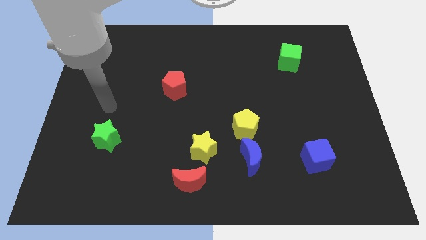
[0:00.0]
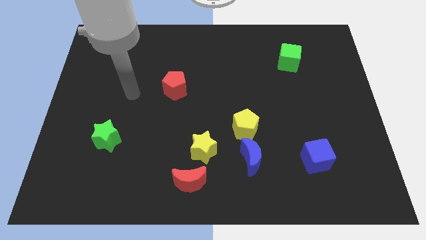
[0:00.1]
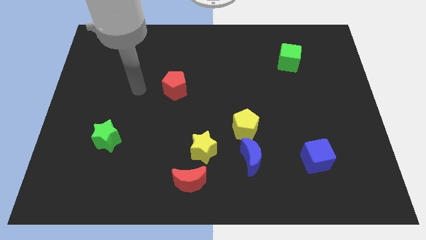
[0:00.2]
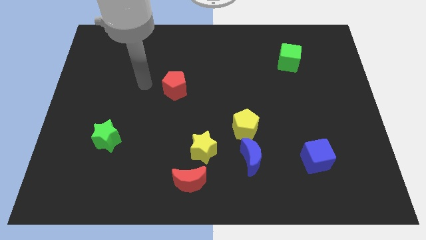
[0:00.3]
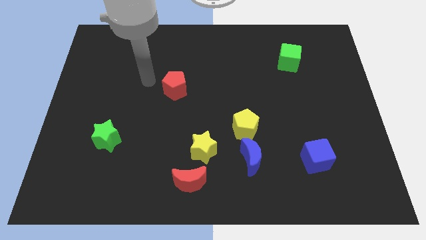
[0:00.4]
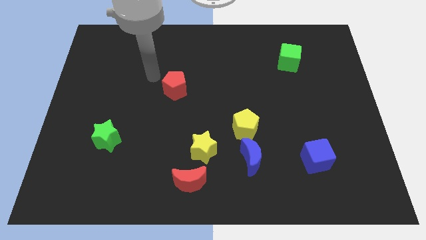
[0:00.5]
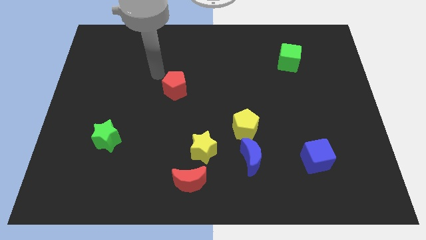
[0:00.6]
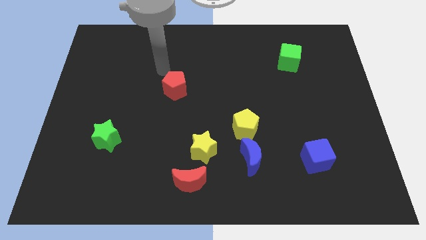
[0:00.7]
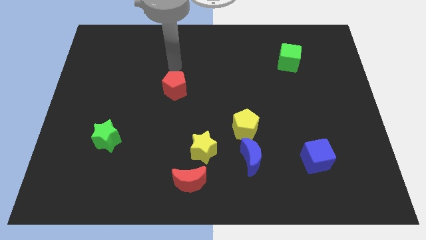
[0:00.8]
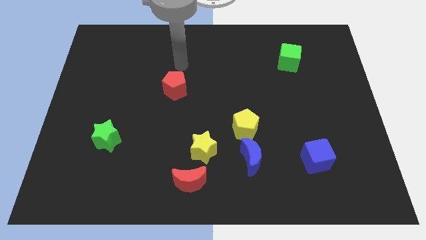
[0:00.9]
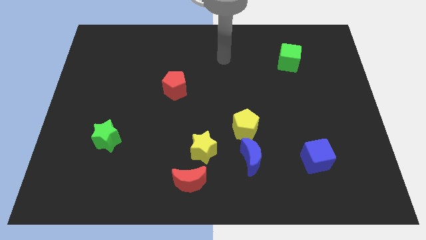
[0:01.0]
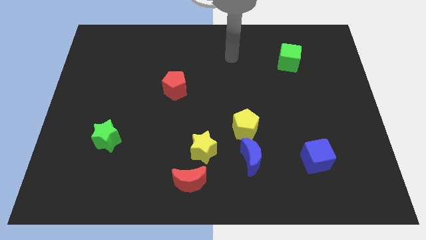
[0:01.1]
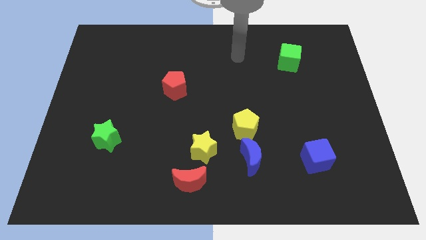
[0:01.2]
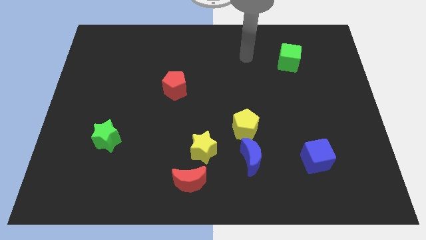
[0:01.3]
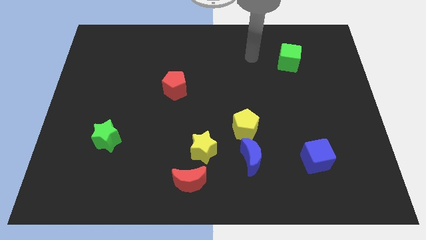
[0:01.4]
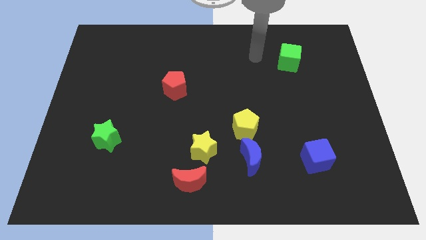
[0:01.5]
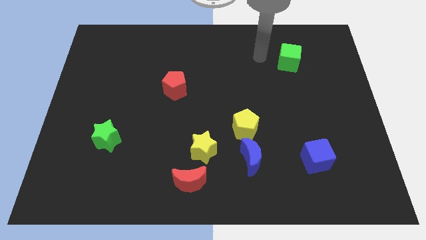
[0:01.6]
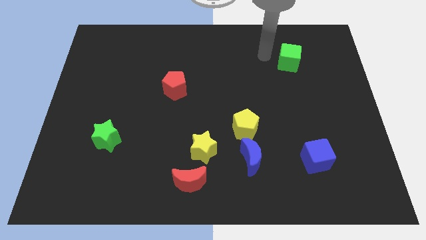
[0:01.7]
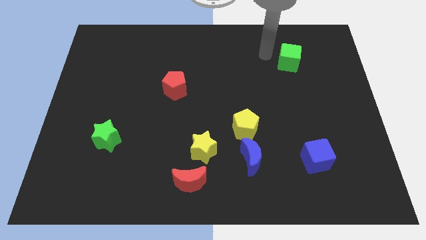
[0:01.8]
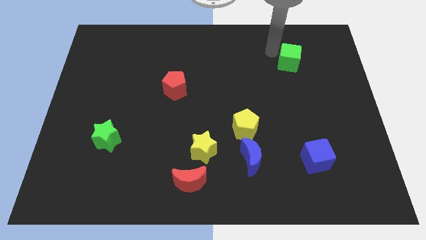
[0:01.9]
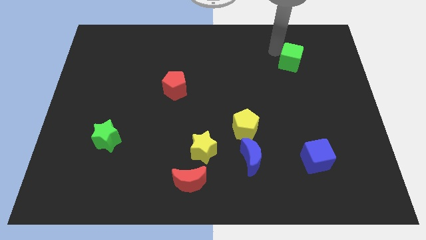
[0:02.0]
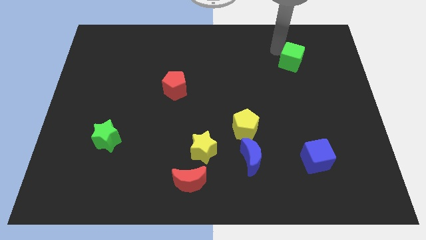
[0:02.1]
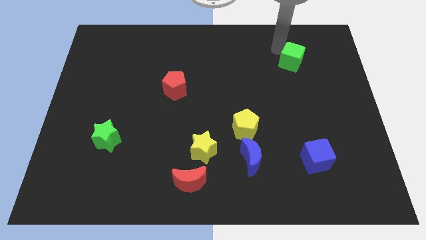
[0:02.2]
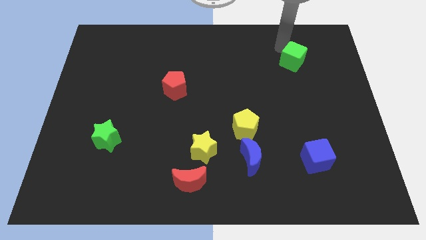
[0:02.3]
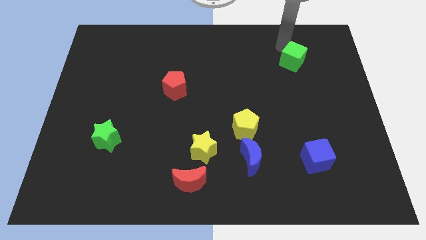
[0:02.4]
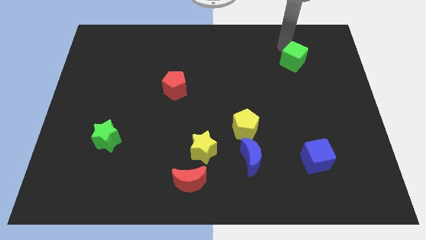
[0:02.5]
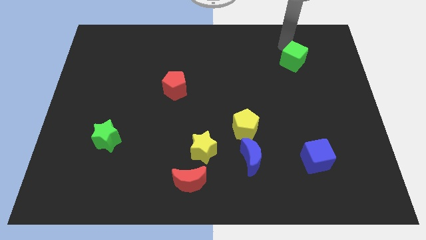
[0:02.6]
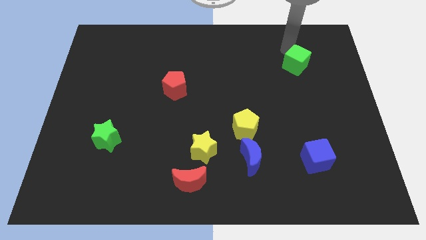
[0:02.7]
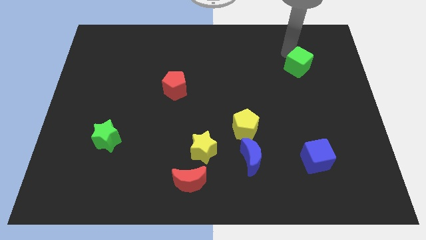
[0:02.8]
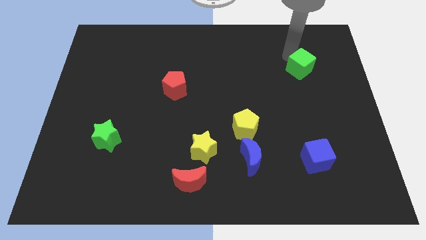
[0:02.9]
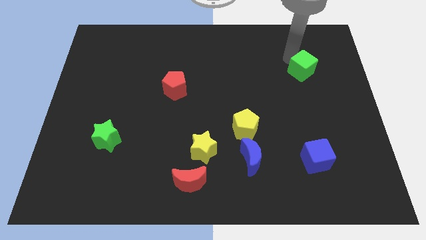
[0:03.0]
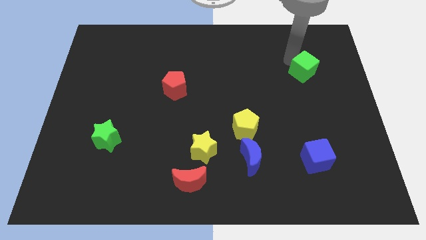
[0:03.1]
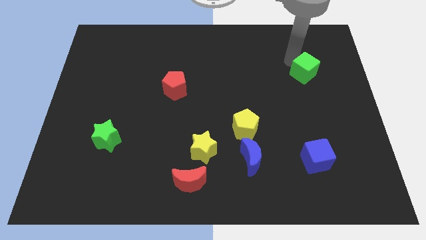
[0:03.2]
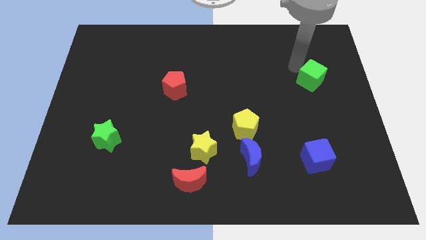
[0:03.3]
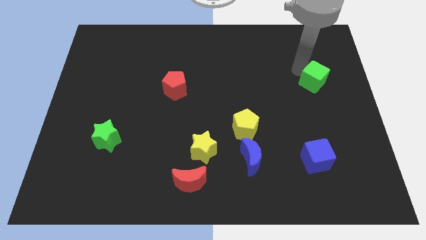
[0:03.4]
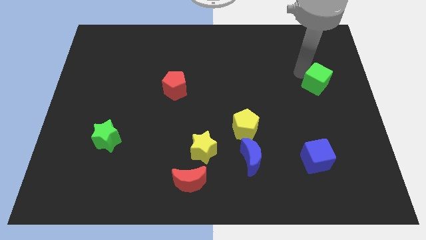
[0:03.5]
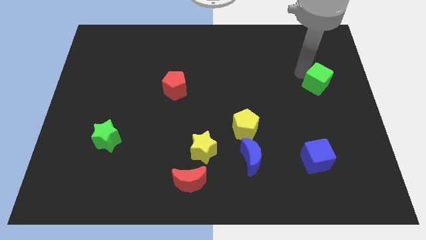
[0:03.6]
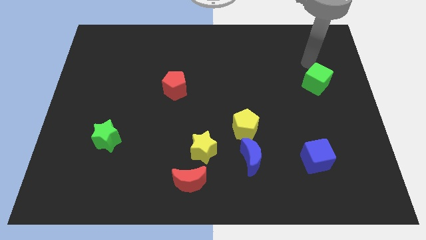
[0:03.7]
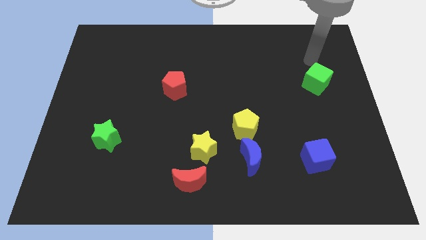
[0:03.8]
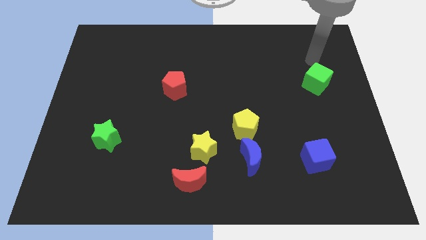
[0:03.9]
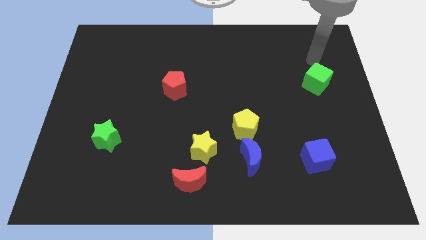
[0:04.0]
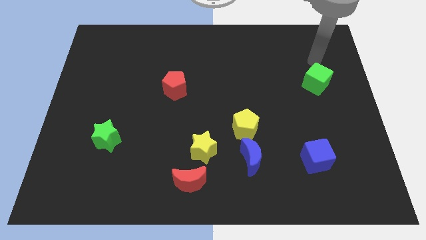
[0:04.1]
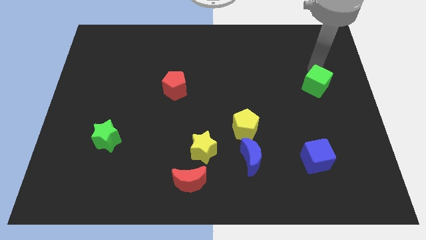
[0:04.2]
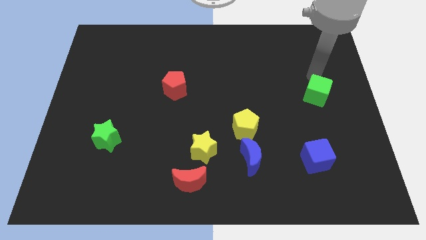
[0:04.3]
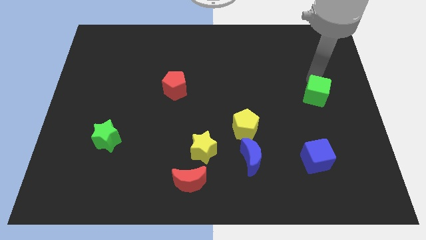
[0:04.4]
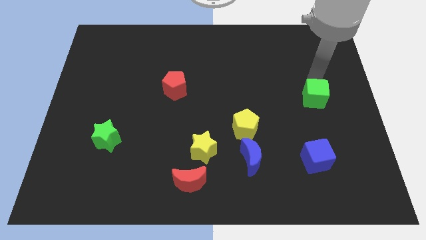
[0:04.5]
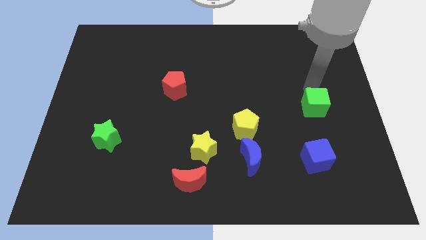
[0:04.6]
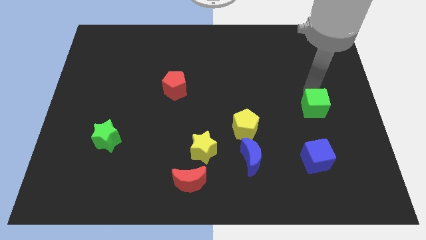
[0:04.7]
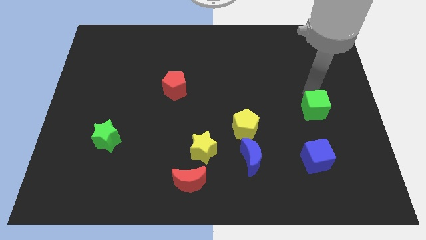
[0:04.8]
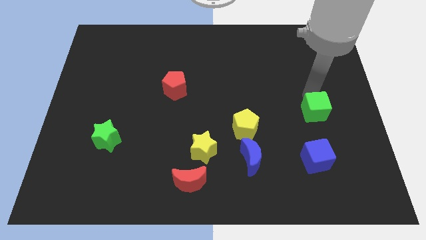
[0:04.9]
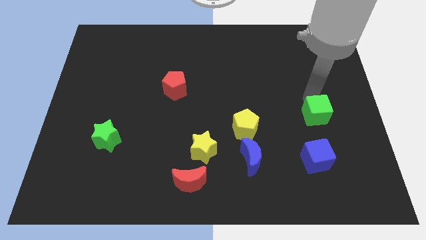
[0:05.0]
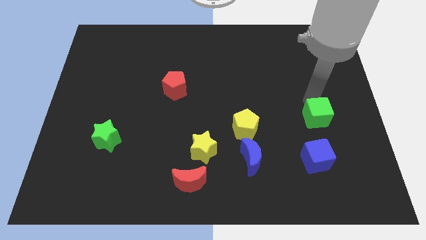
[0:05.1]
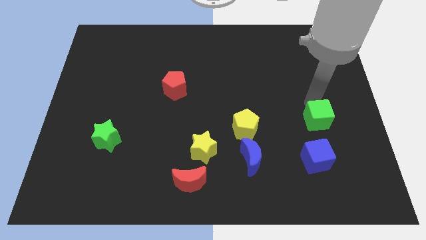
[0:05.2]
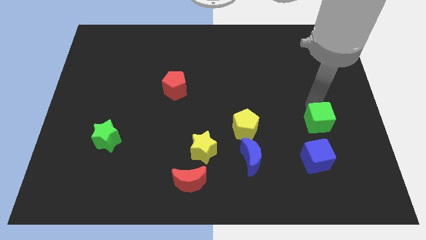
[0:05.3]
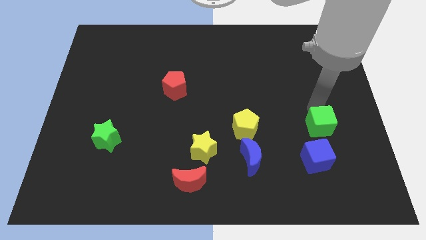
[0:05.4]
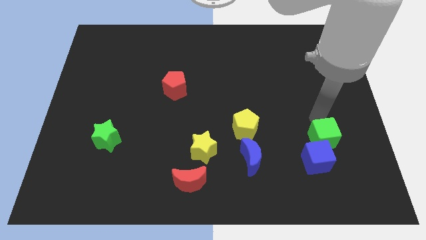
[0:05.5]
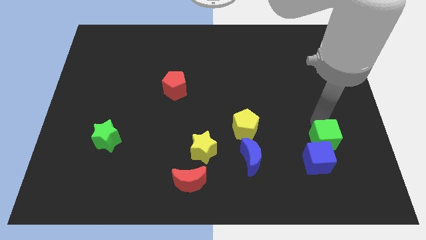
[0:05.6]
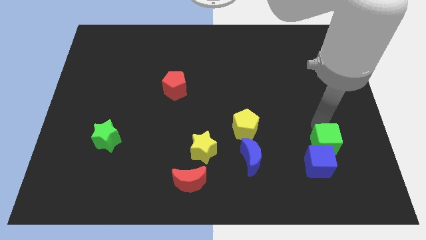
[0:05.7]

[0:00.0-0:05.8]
slide the green cube to the blue cube

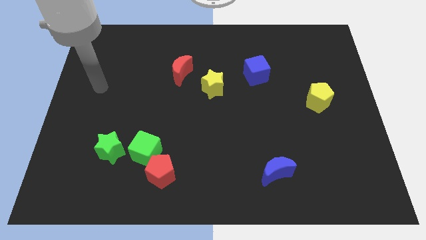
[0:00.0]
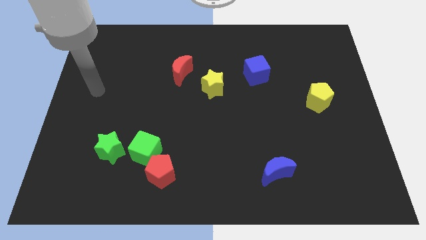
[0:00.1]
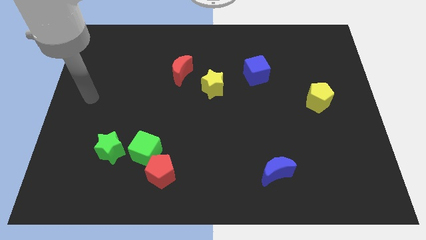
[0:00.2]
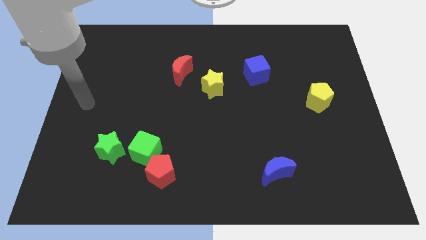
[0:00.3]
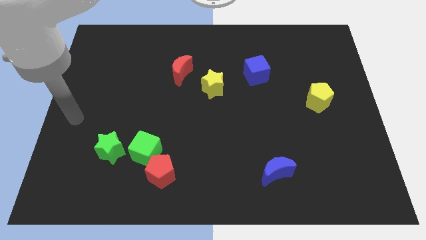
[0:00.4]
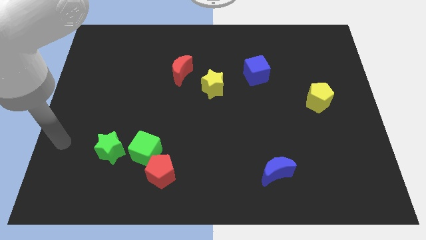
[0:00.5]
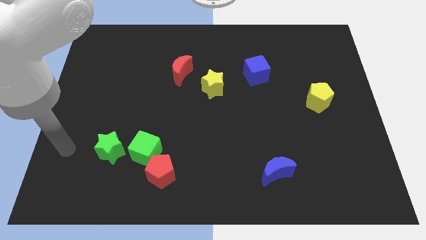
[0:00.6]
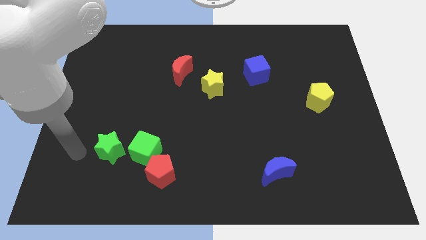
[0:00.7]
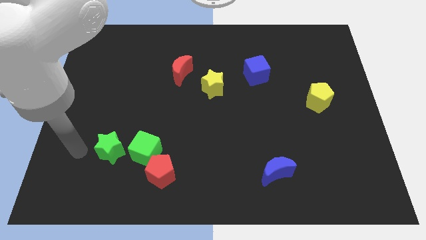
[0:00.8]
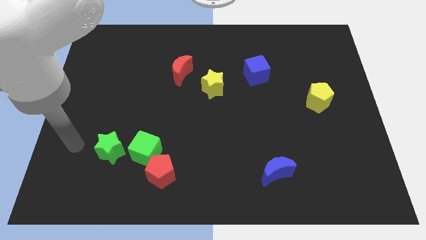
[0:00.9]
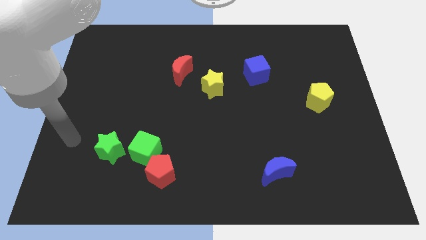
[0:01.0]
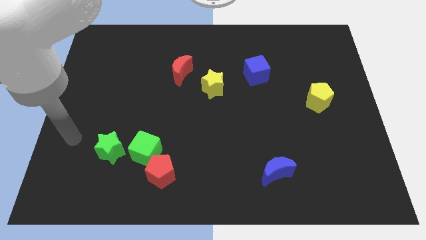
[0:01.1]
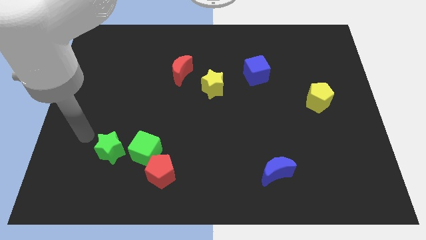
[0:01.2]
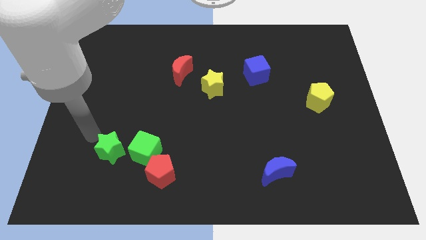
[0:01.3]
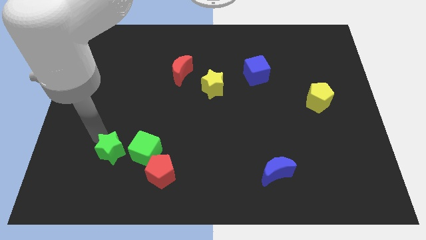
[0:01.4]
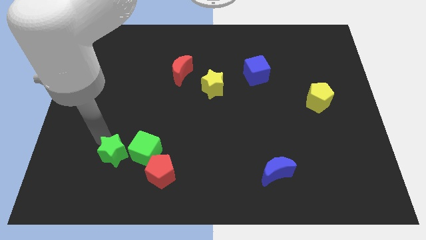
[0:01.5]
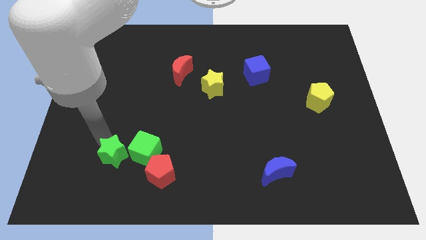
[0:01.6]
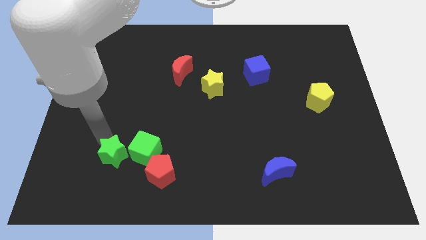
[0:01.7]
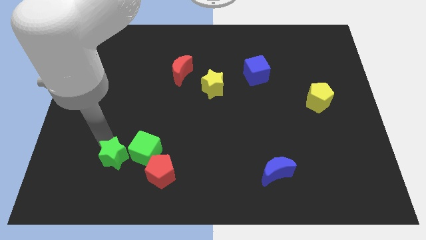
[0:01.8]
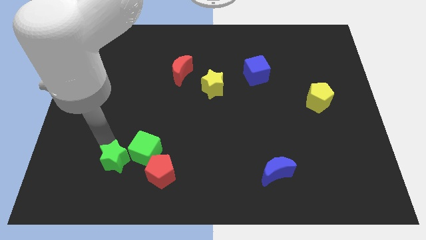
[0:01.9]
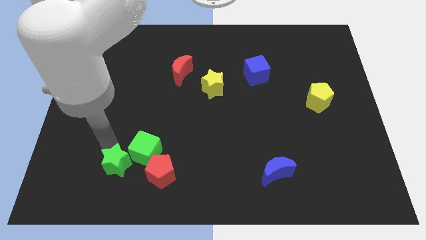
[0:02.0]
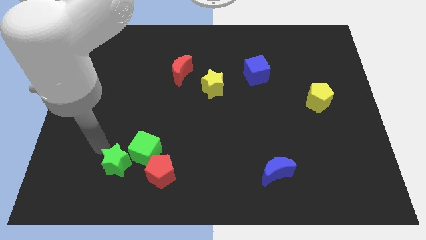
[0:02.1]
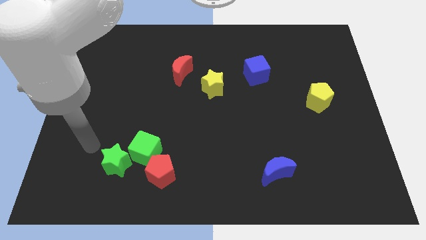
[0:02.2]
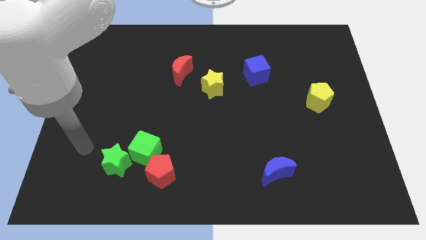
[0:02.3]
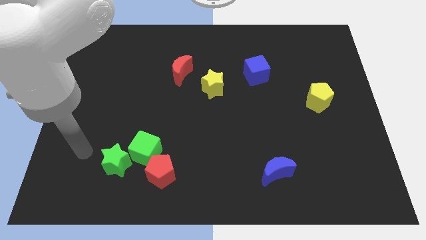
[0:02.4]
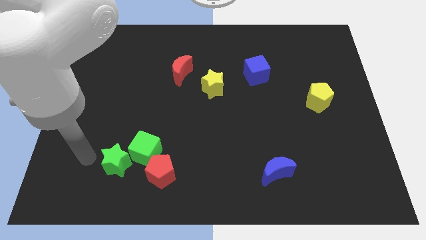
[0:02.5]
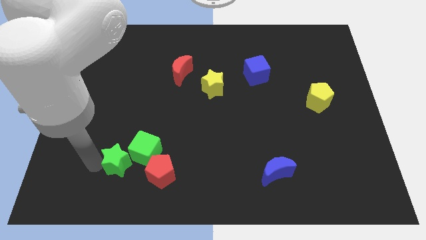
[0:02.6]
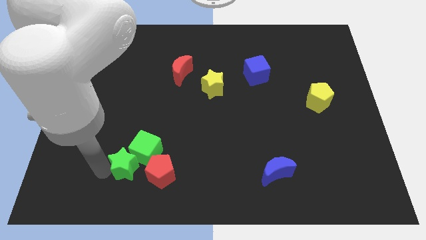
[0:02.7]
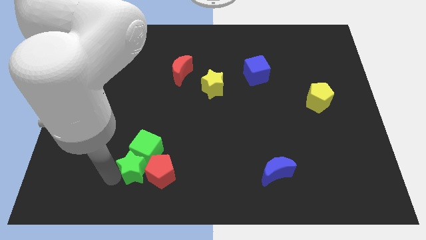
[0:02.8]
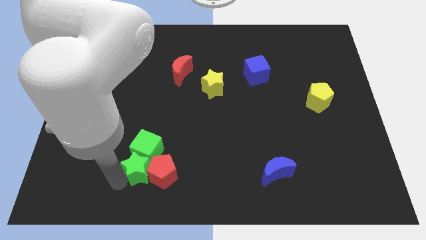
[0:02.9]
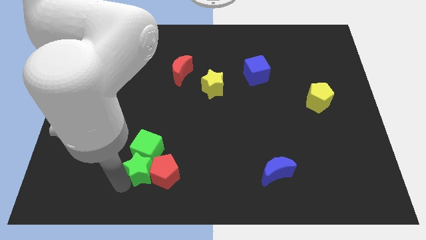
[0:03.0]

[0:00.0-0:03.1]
slide the green star towards the red pentagon
